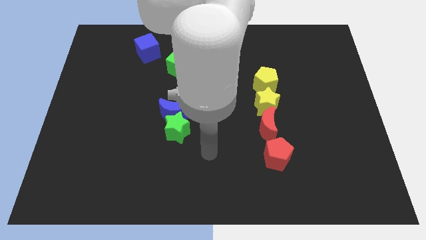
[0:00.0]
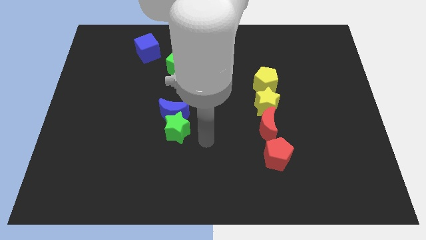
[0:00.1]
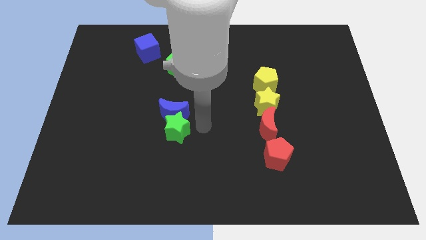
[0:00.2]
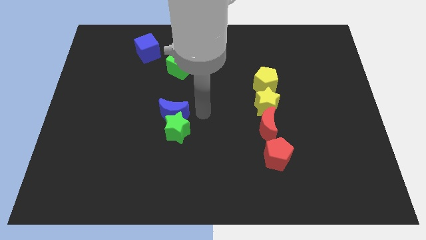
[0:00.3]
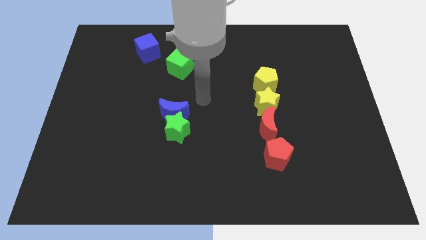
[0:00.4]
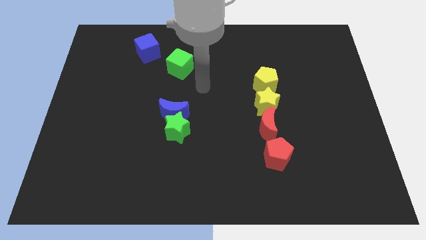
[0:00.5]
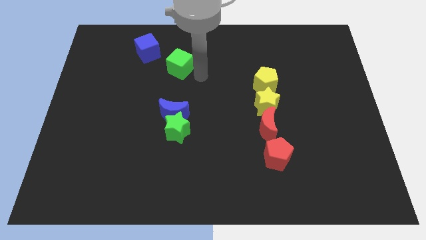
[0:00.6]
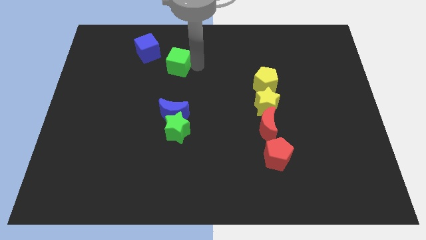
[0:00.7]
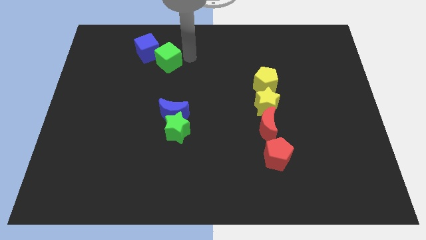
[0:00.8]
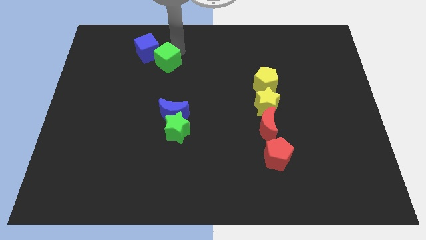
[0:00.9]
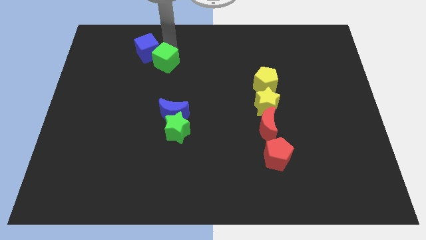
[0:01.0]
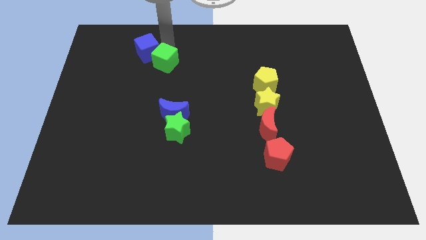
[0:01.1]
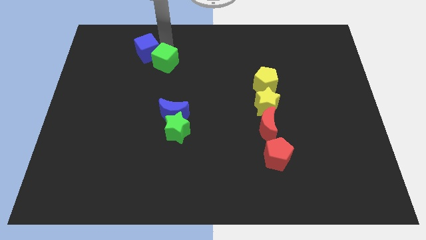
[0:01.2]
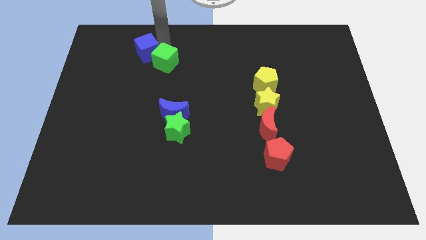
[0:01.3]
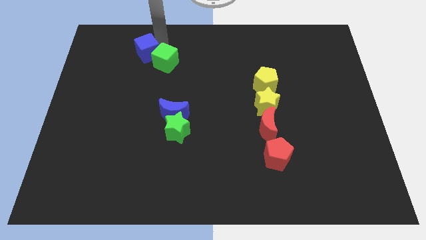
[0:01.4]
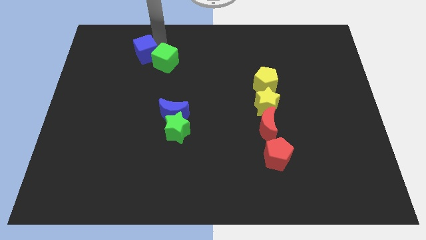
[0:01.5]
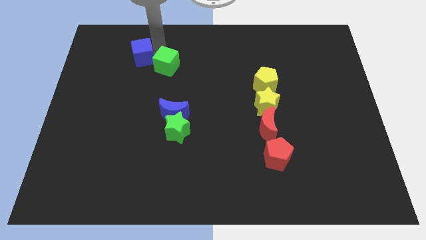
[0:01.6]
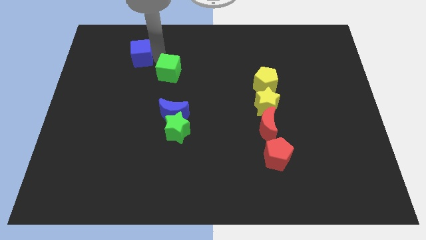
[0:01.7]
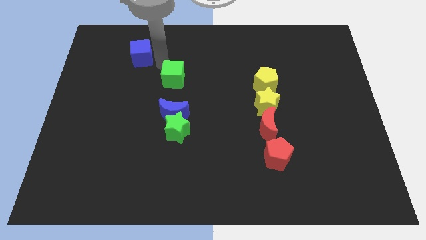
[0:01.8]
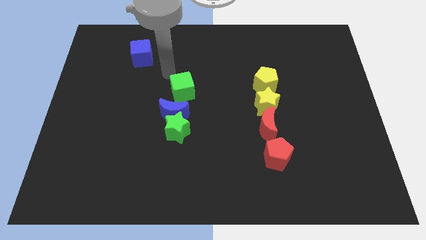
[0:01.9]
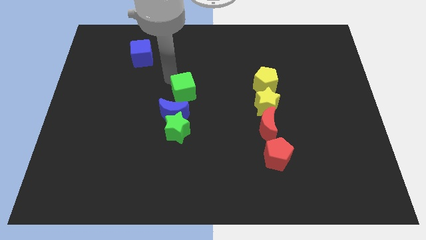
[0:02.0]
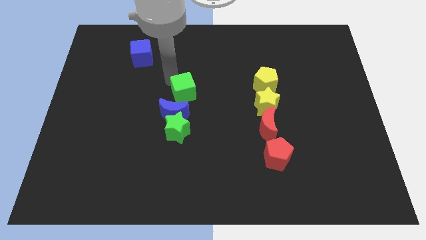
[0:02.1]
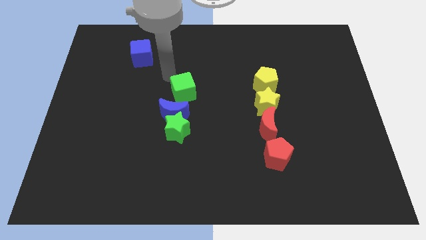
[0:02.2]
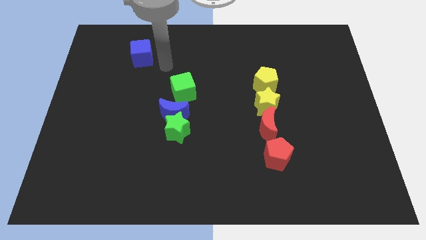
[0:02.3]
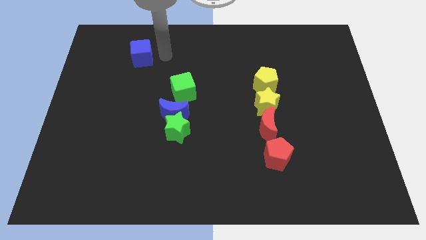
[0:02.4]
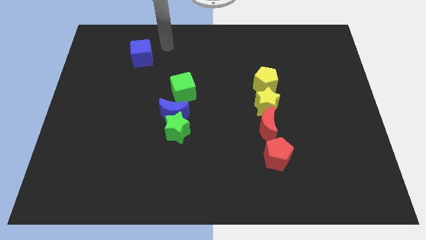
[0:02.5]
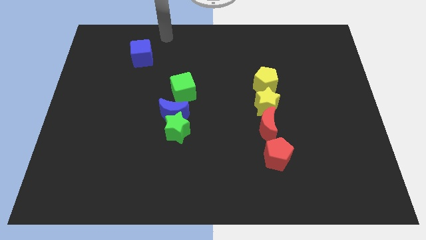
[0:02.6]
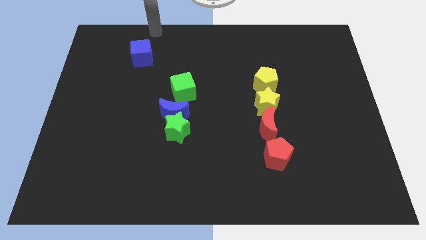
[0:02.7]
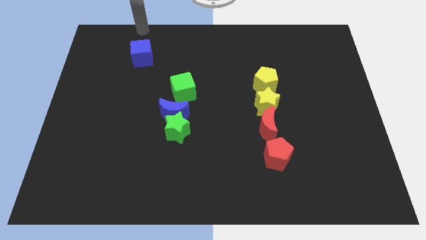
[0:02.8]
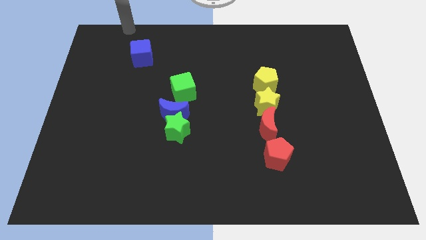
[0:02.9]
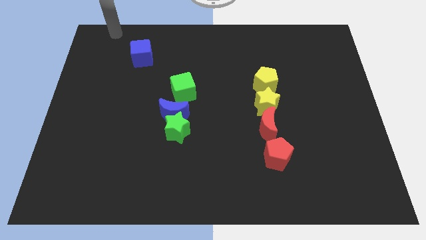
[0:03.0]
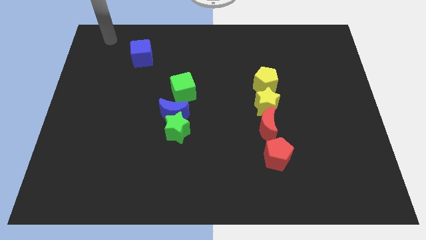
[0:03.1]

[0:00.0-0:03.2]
slide the green cube into the blue moon

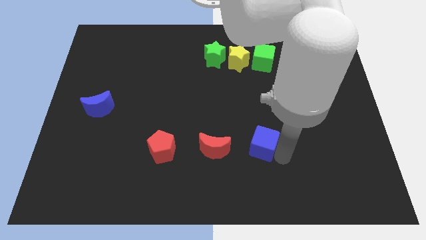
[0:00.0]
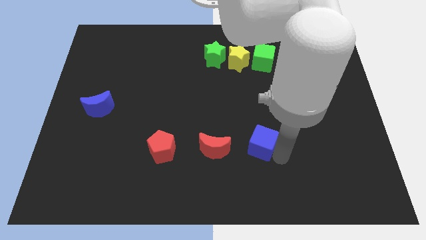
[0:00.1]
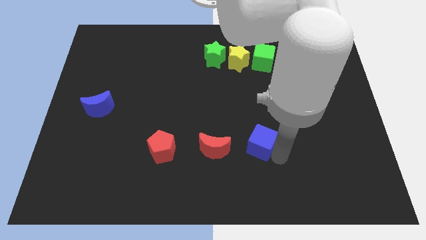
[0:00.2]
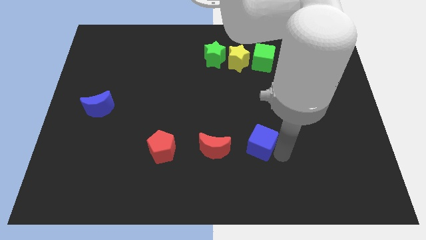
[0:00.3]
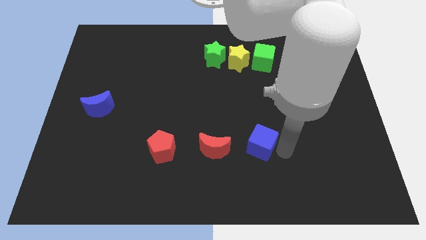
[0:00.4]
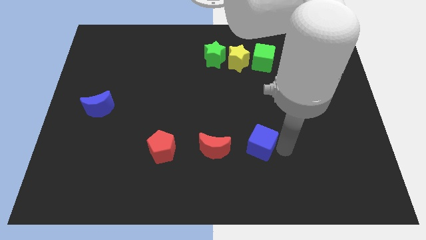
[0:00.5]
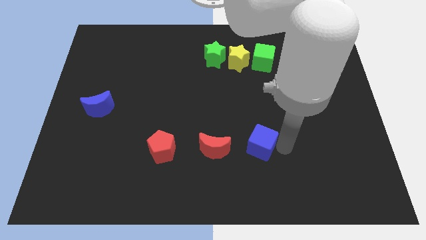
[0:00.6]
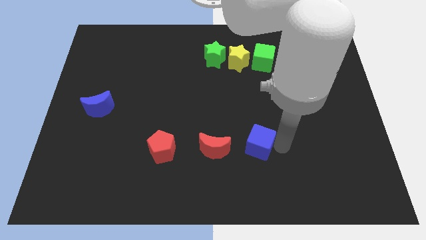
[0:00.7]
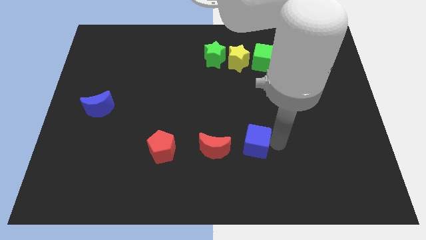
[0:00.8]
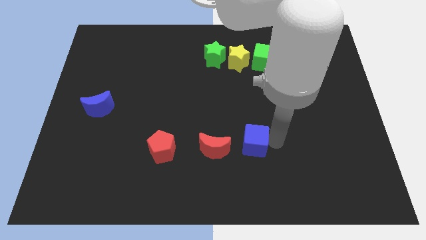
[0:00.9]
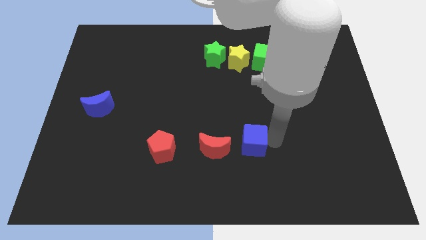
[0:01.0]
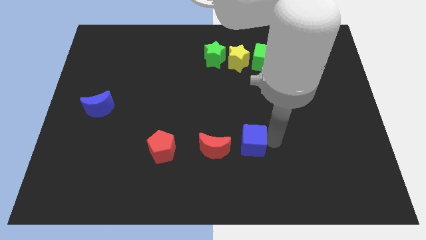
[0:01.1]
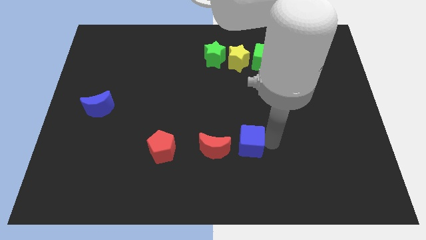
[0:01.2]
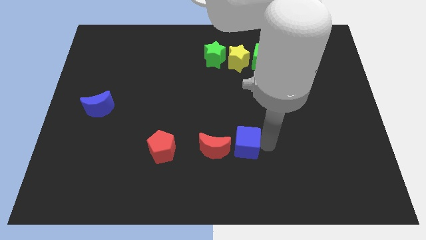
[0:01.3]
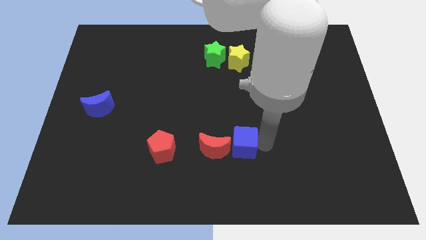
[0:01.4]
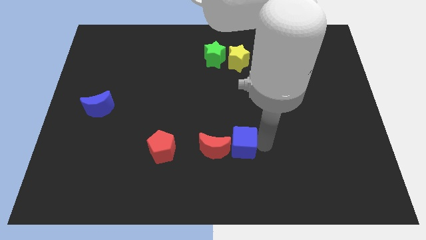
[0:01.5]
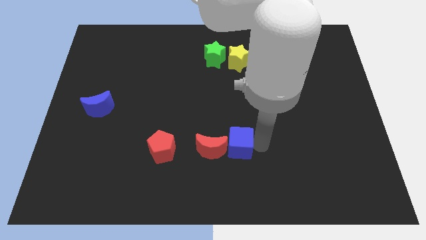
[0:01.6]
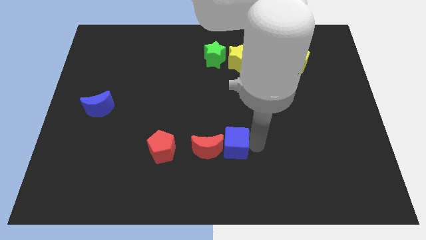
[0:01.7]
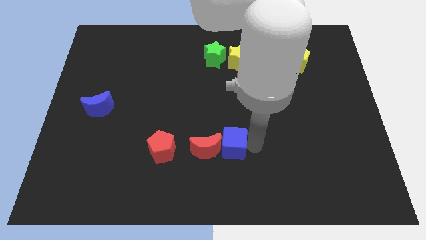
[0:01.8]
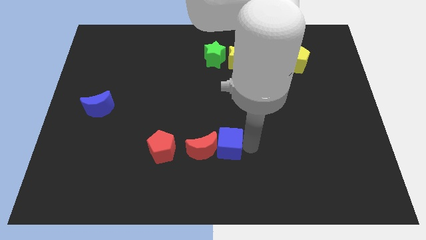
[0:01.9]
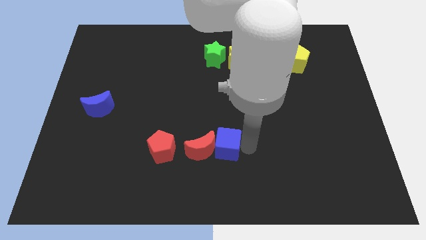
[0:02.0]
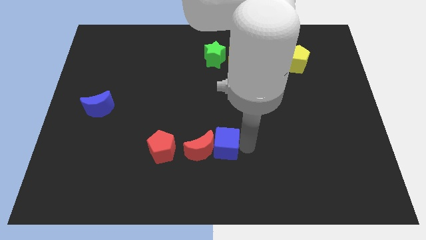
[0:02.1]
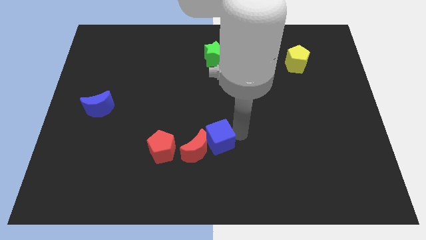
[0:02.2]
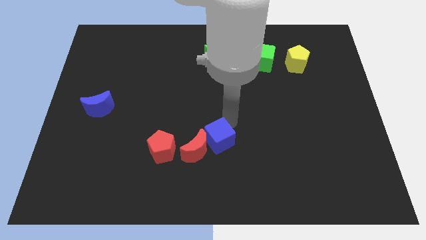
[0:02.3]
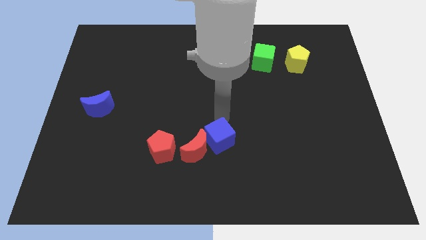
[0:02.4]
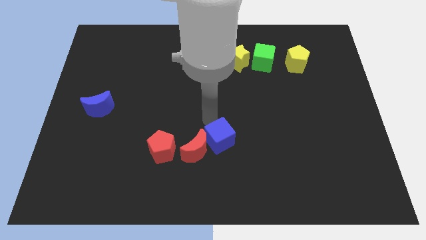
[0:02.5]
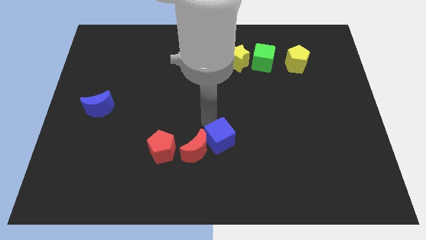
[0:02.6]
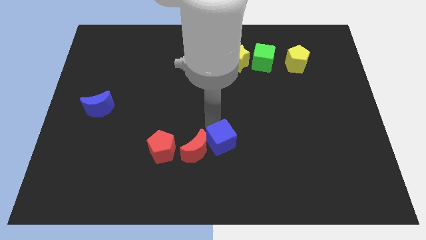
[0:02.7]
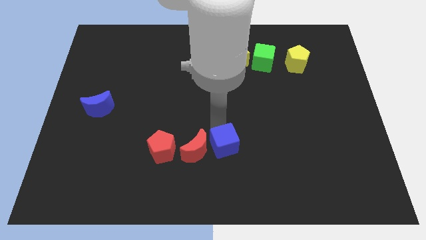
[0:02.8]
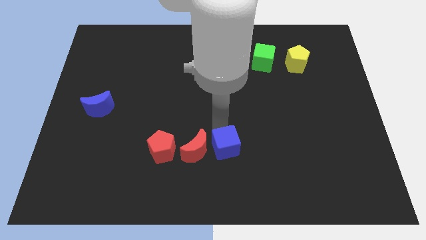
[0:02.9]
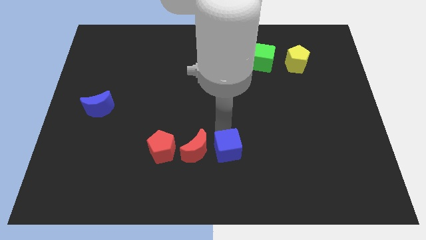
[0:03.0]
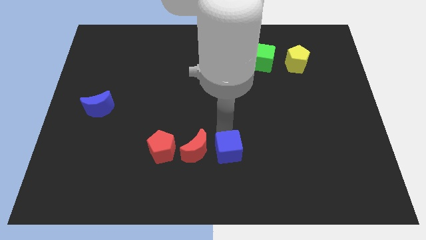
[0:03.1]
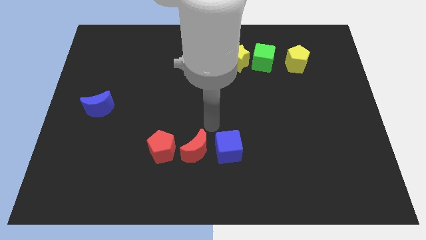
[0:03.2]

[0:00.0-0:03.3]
make a horizontal line with the blue cube and the red blocks at the bottom side of the table

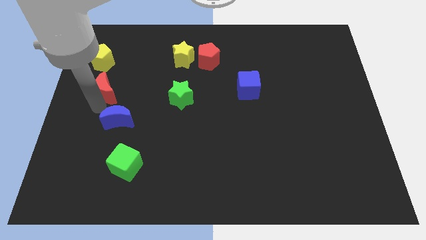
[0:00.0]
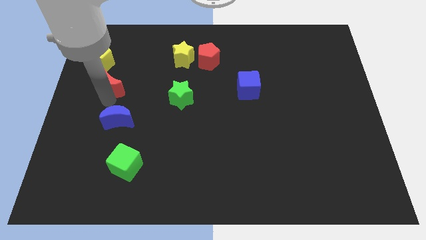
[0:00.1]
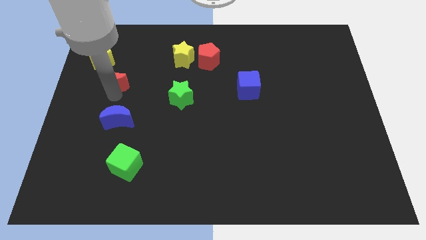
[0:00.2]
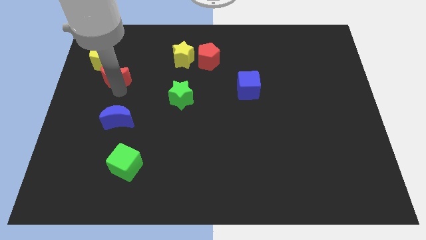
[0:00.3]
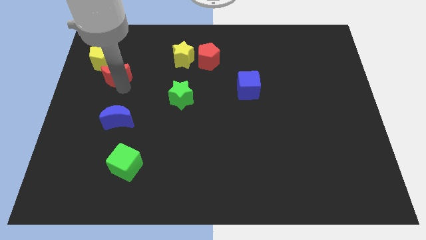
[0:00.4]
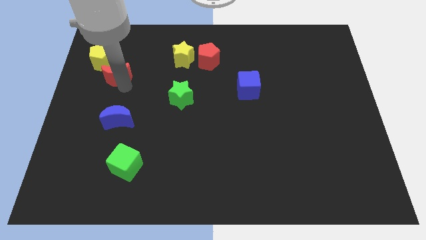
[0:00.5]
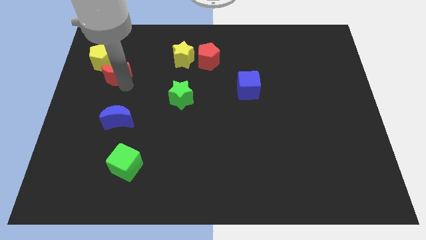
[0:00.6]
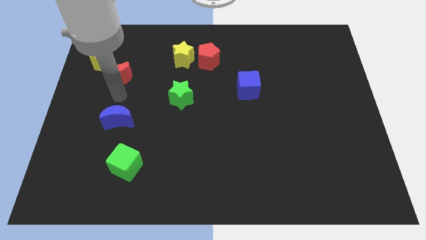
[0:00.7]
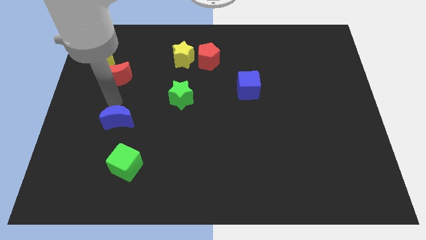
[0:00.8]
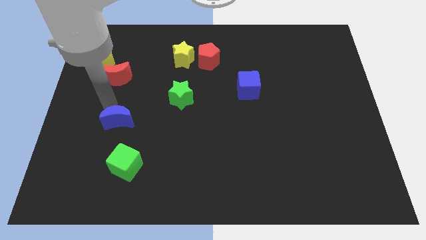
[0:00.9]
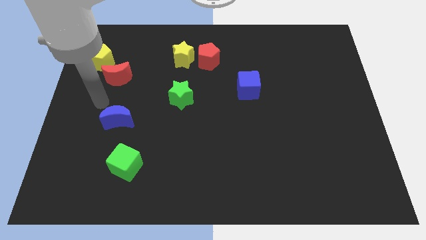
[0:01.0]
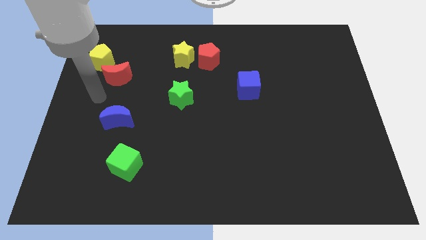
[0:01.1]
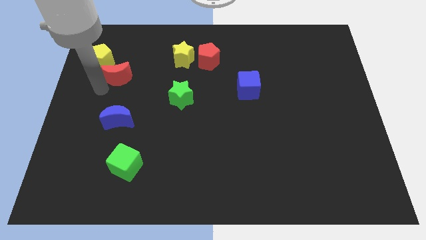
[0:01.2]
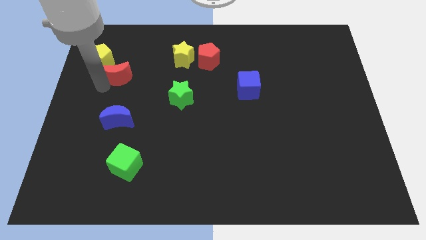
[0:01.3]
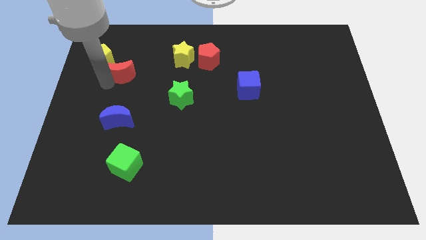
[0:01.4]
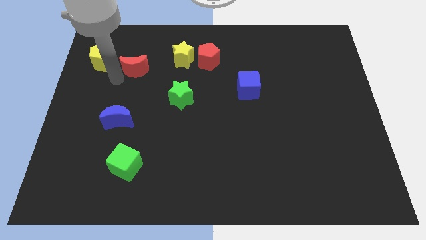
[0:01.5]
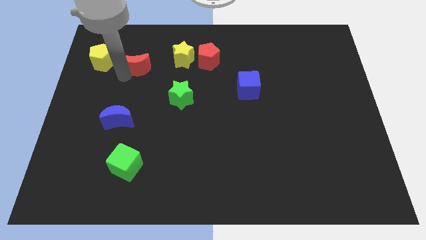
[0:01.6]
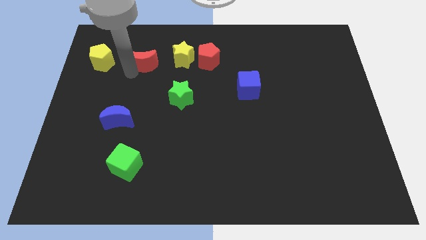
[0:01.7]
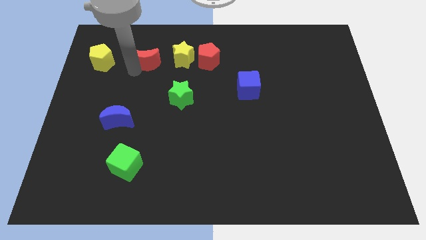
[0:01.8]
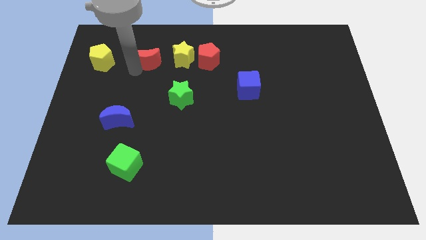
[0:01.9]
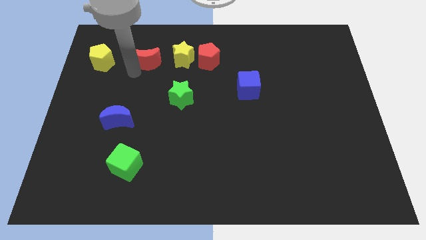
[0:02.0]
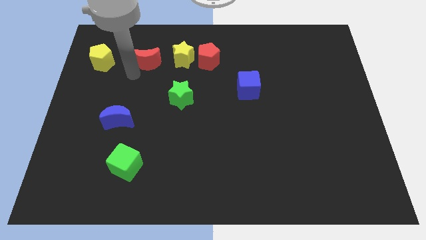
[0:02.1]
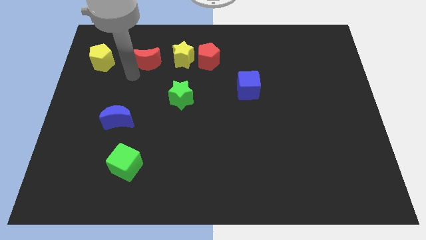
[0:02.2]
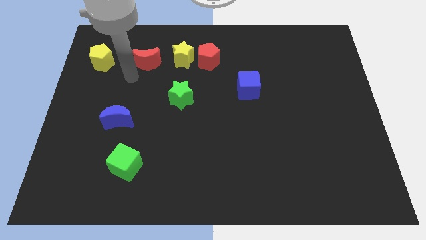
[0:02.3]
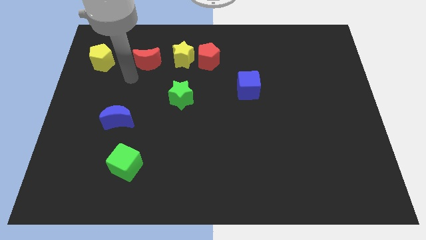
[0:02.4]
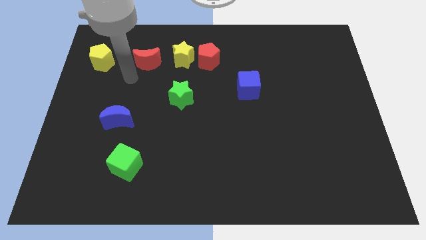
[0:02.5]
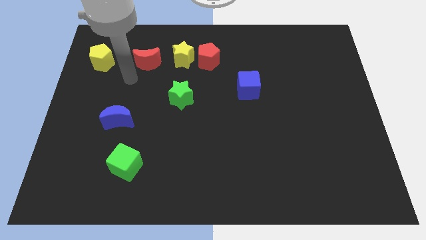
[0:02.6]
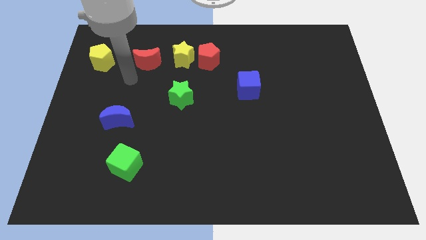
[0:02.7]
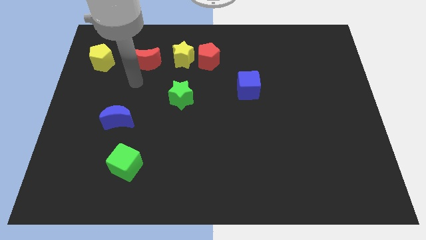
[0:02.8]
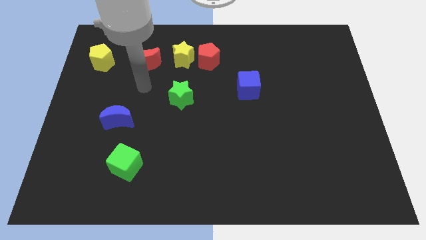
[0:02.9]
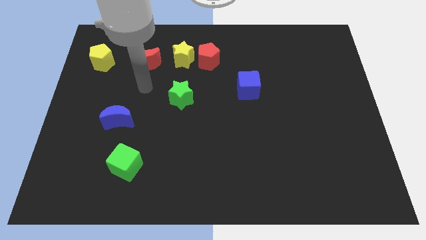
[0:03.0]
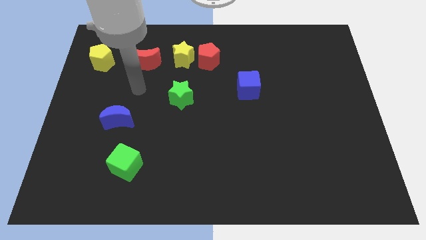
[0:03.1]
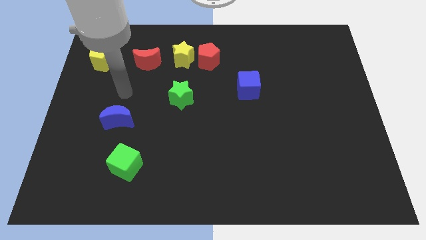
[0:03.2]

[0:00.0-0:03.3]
slide the red moon in between yellow pentagon and yellow star
